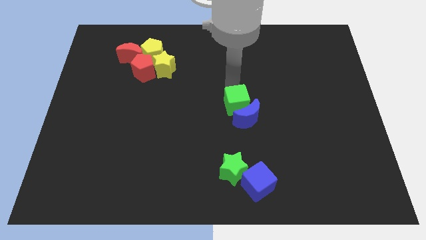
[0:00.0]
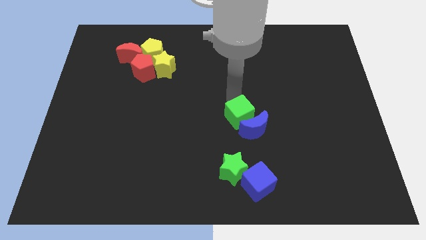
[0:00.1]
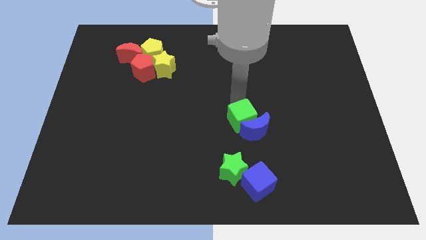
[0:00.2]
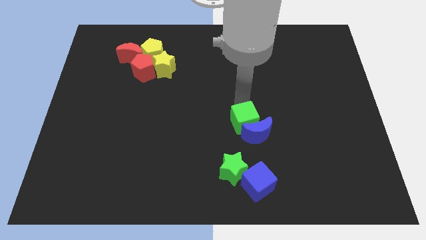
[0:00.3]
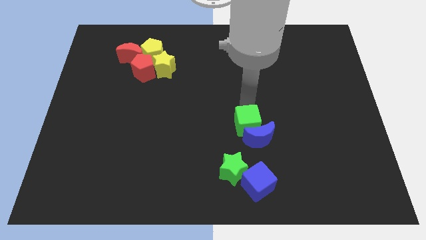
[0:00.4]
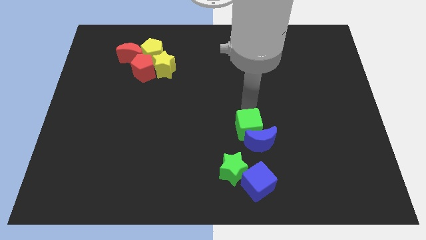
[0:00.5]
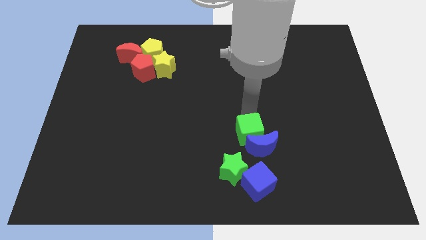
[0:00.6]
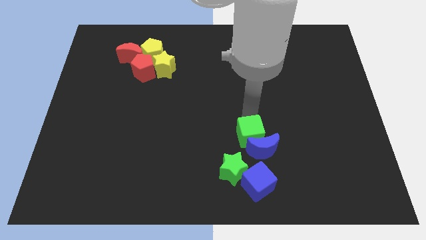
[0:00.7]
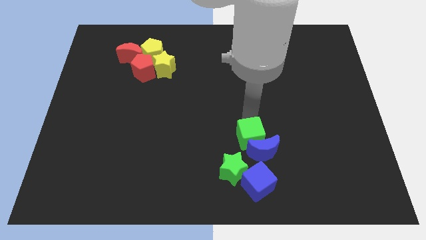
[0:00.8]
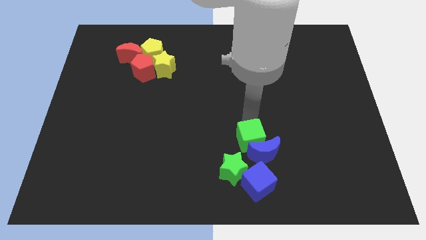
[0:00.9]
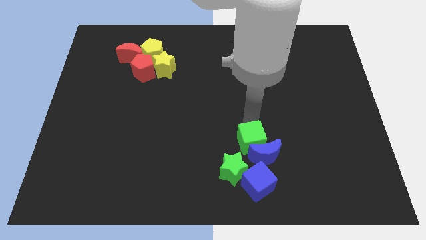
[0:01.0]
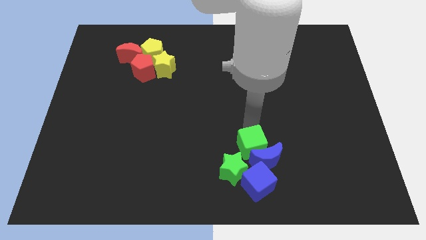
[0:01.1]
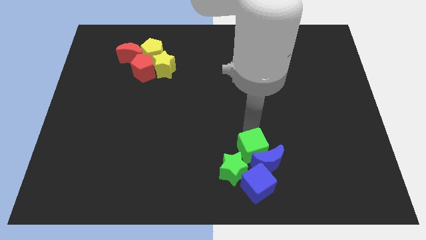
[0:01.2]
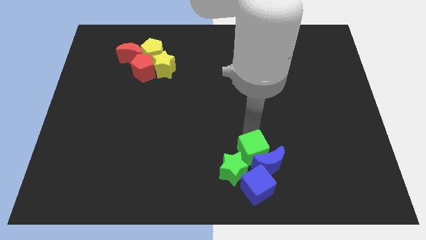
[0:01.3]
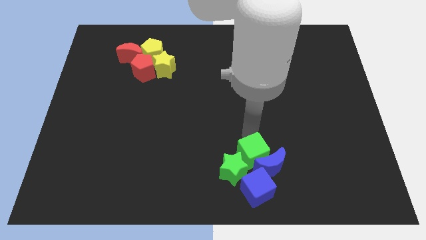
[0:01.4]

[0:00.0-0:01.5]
group up the green and blue blocks at bottom side of the board

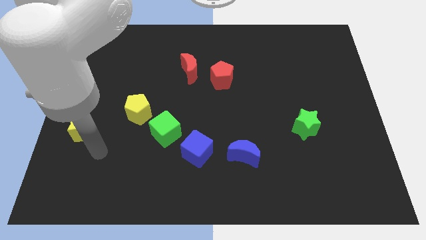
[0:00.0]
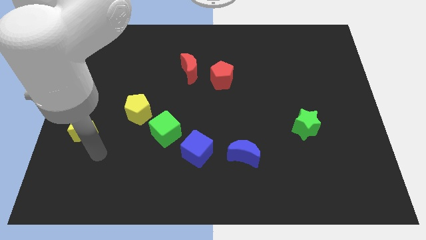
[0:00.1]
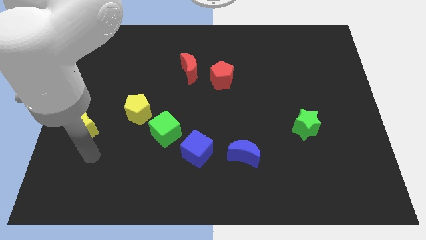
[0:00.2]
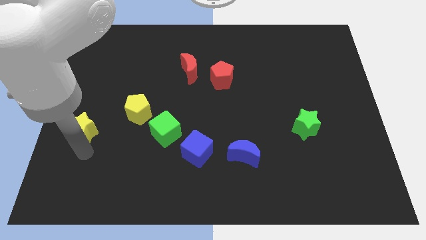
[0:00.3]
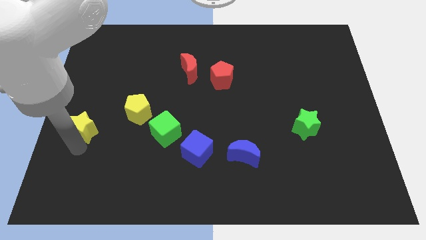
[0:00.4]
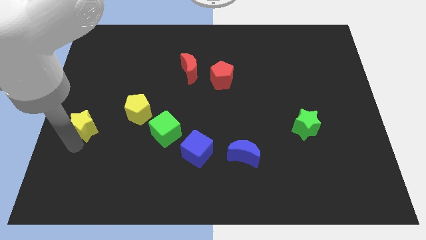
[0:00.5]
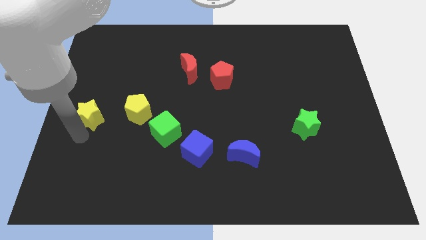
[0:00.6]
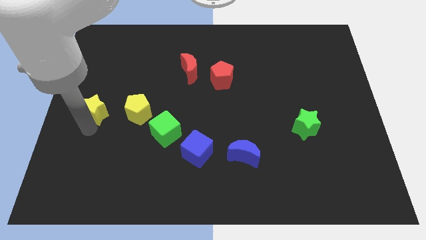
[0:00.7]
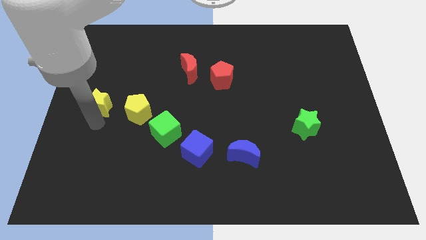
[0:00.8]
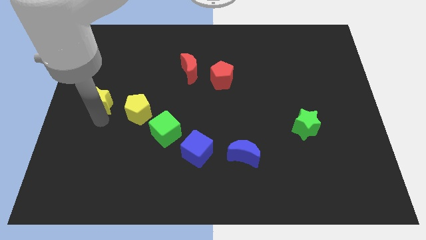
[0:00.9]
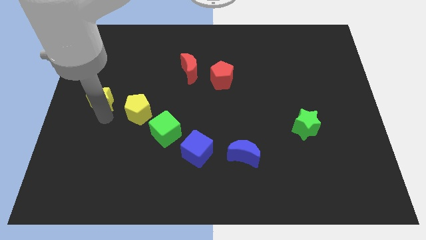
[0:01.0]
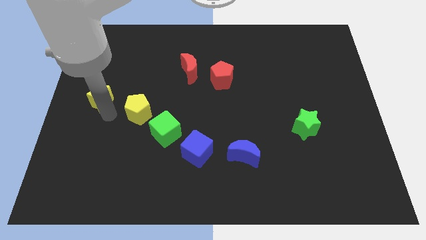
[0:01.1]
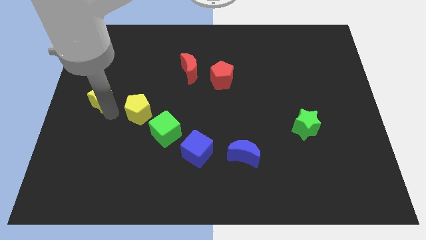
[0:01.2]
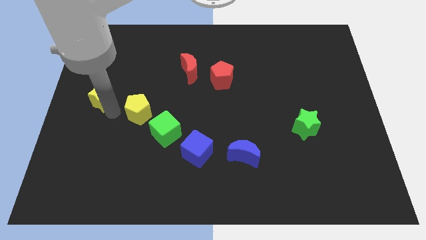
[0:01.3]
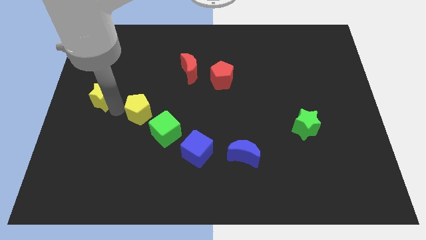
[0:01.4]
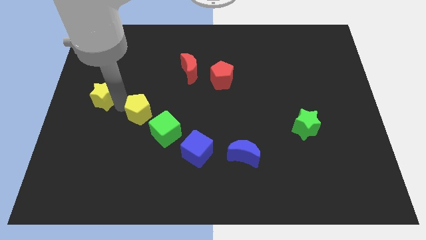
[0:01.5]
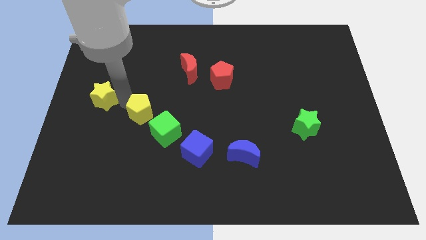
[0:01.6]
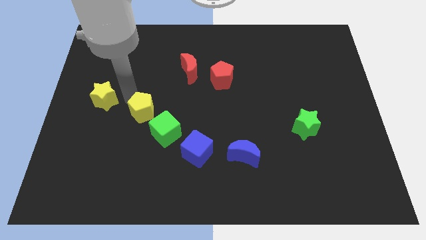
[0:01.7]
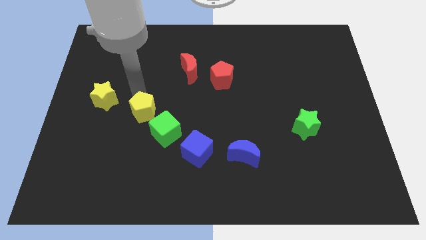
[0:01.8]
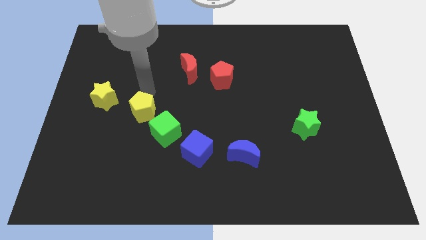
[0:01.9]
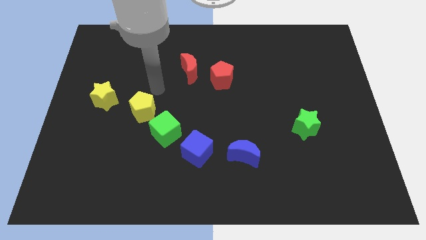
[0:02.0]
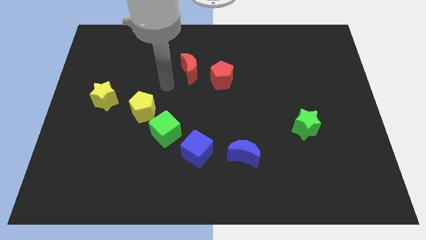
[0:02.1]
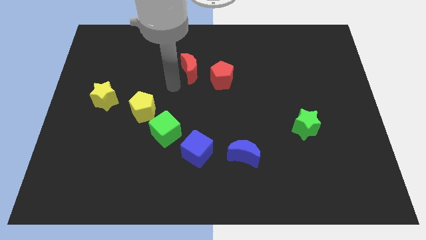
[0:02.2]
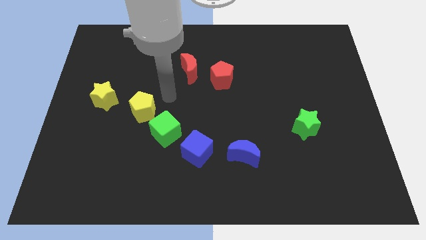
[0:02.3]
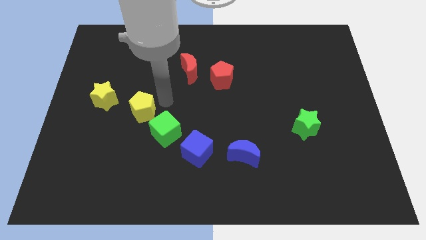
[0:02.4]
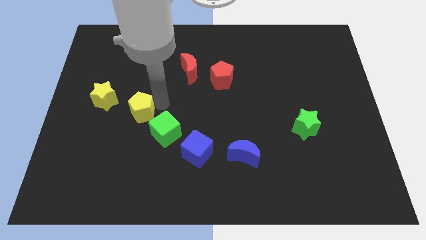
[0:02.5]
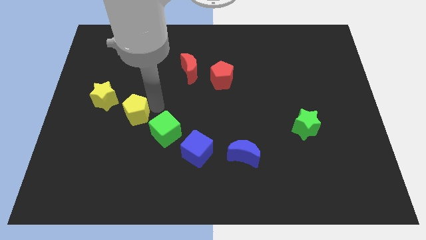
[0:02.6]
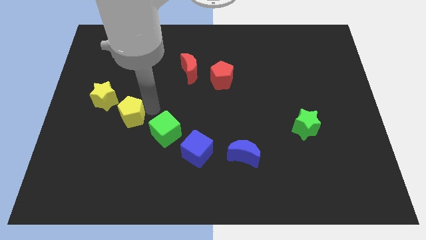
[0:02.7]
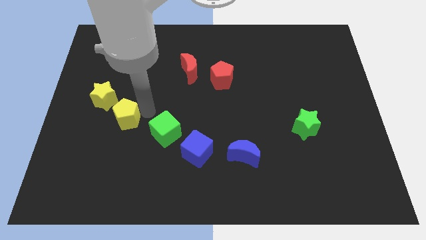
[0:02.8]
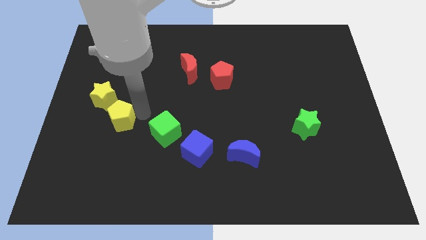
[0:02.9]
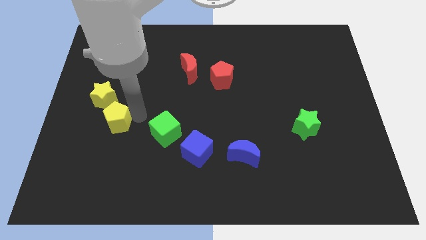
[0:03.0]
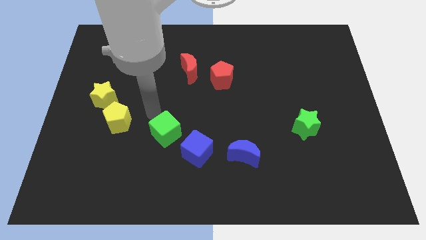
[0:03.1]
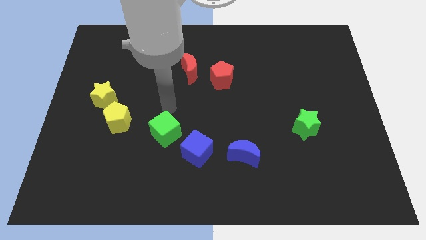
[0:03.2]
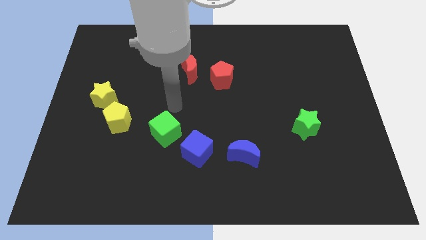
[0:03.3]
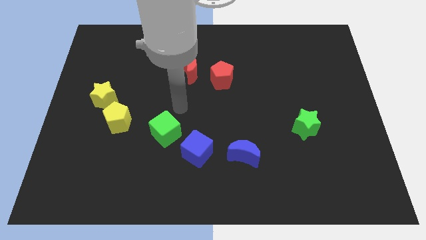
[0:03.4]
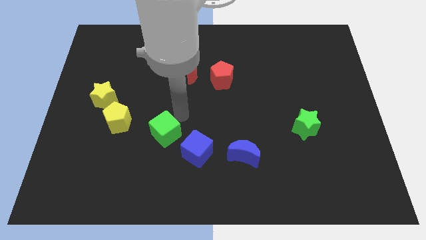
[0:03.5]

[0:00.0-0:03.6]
move yellow pentagon slightly down

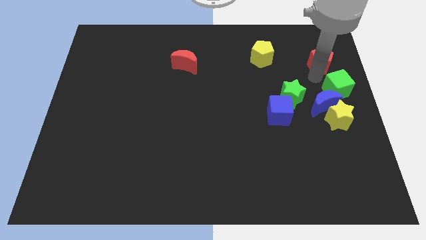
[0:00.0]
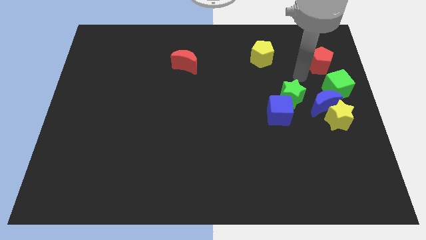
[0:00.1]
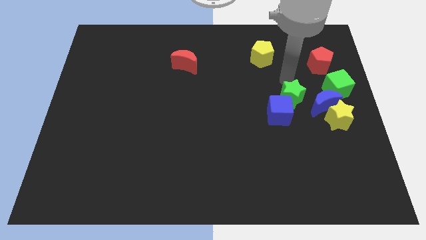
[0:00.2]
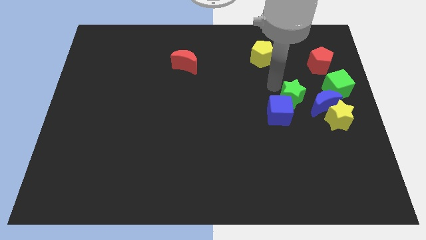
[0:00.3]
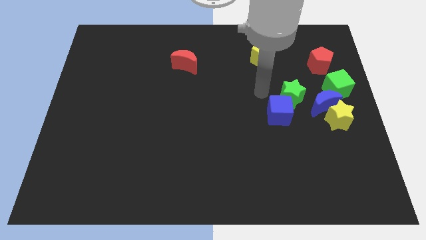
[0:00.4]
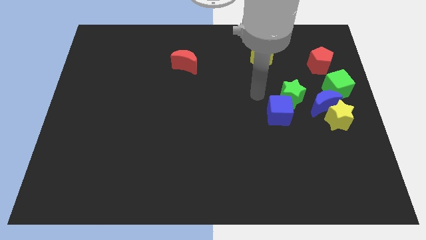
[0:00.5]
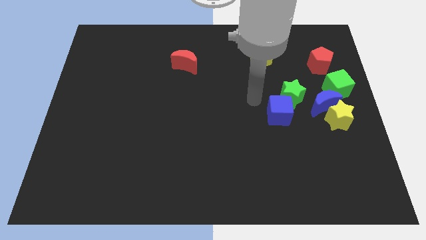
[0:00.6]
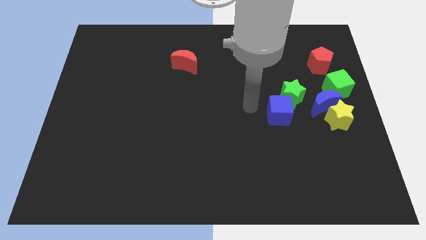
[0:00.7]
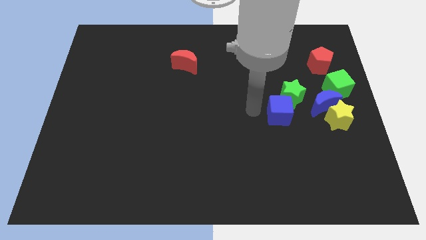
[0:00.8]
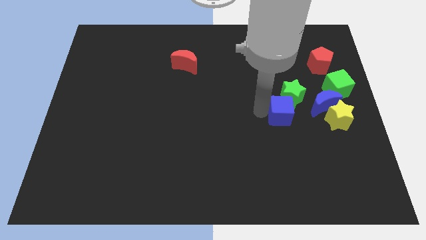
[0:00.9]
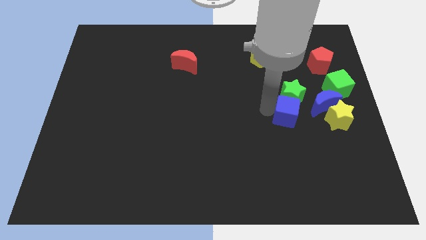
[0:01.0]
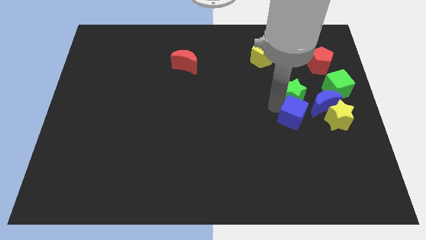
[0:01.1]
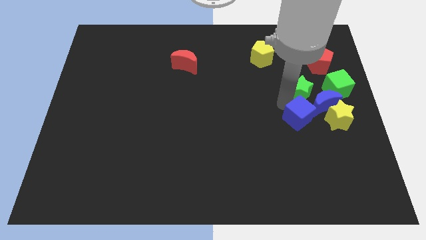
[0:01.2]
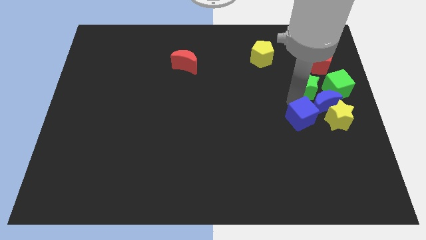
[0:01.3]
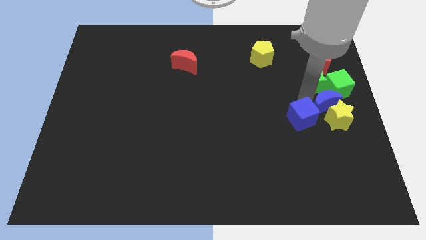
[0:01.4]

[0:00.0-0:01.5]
move the blue cube downward

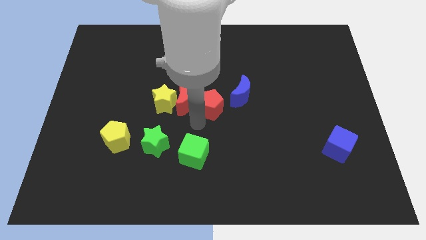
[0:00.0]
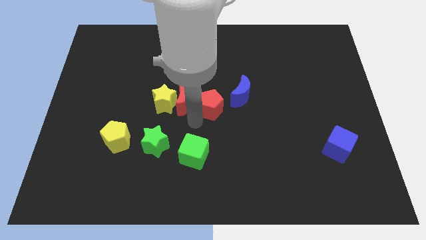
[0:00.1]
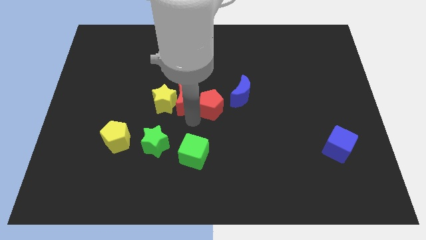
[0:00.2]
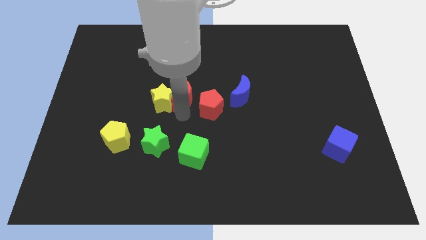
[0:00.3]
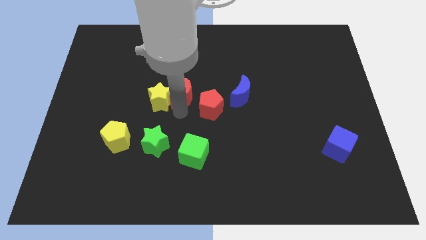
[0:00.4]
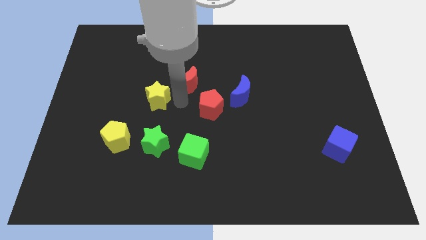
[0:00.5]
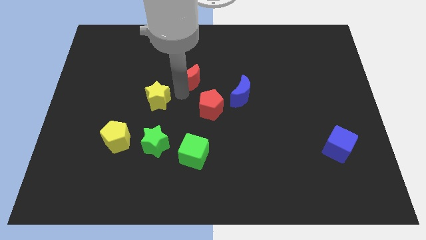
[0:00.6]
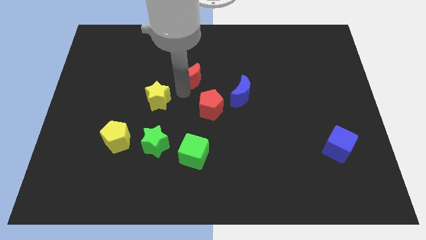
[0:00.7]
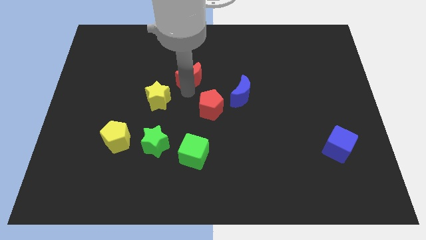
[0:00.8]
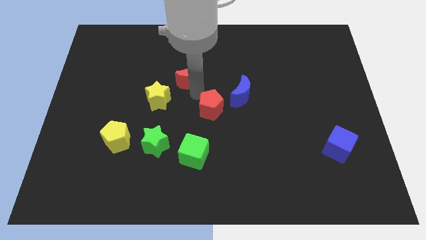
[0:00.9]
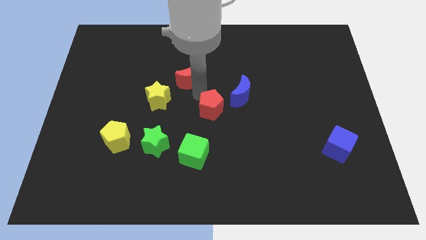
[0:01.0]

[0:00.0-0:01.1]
slightly move the red crescent towards the top

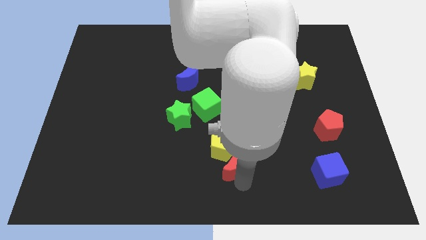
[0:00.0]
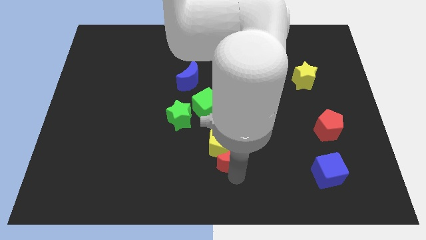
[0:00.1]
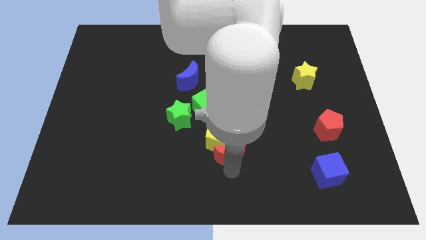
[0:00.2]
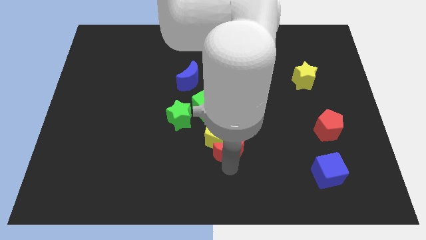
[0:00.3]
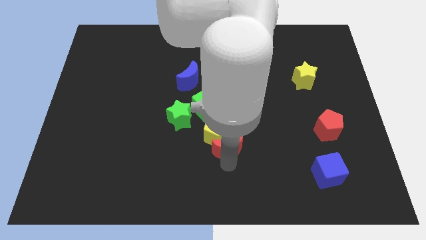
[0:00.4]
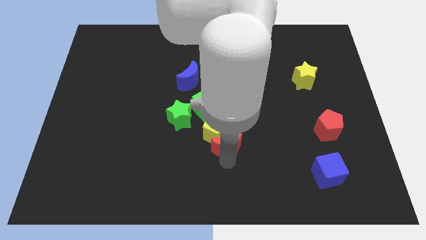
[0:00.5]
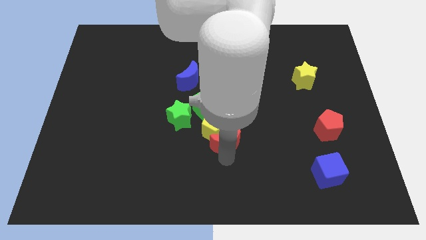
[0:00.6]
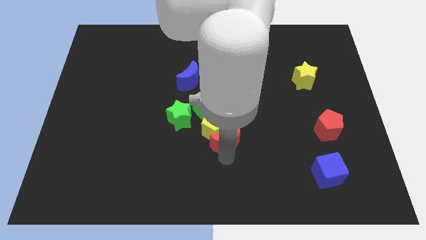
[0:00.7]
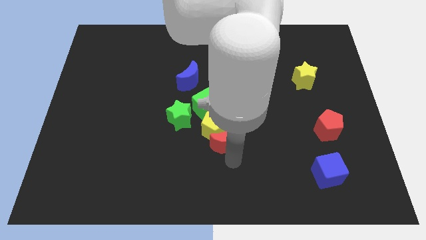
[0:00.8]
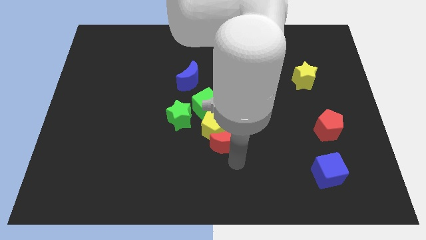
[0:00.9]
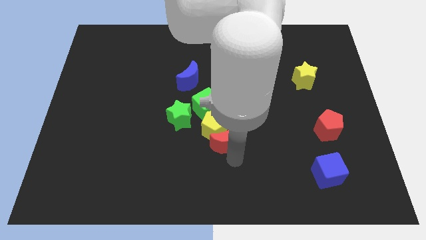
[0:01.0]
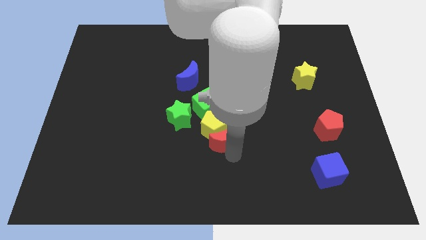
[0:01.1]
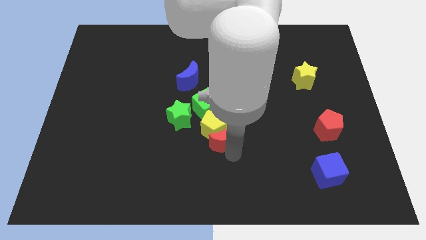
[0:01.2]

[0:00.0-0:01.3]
drag the red moon slightly upwards

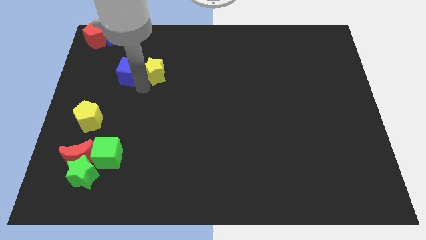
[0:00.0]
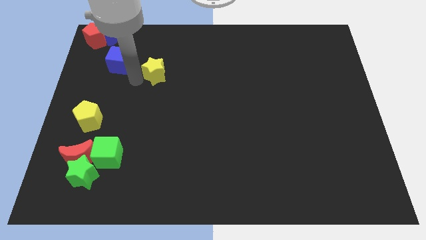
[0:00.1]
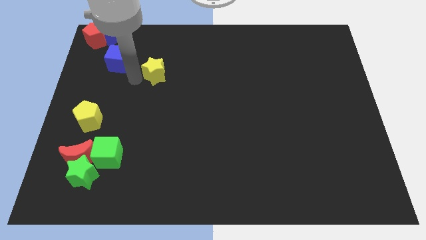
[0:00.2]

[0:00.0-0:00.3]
move the blue cube vertical to the blue crescent
